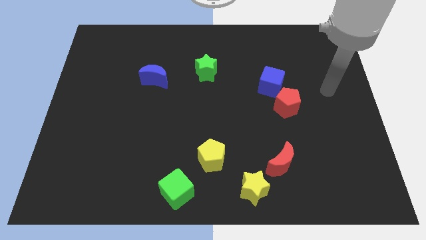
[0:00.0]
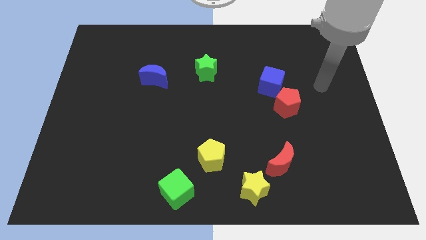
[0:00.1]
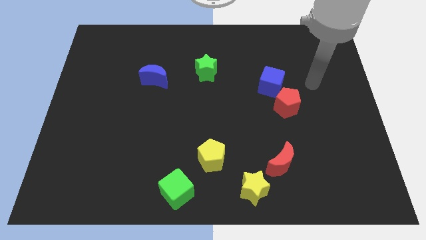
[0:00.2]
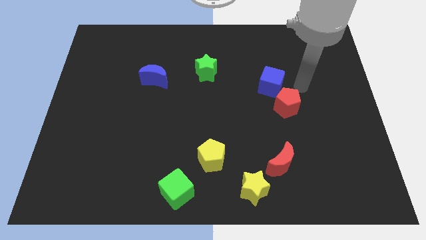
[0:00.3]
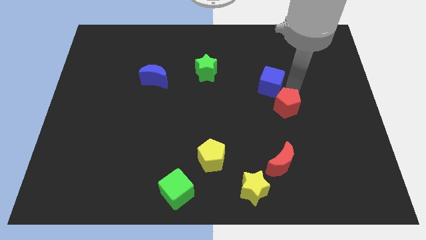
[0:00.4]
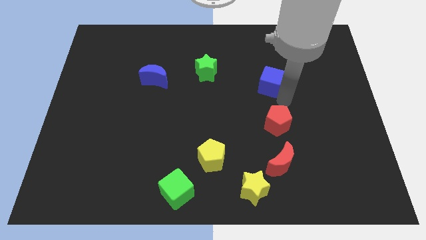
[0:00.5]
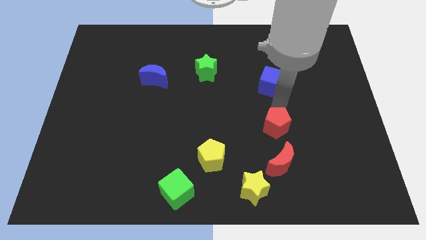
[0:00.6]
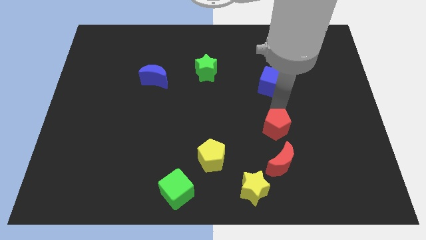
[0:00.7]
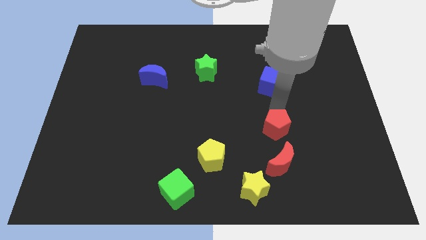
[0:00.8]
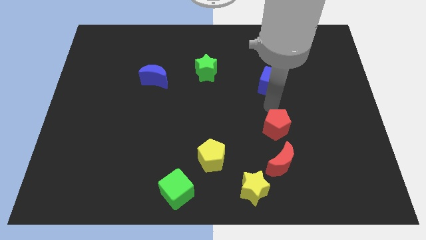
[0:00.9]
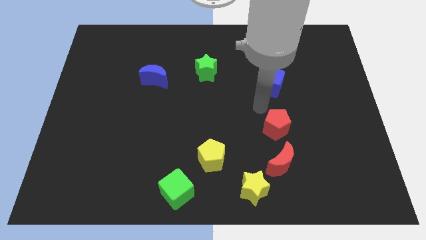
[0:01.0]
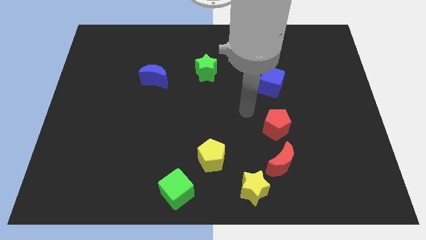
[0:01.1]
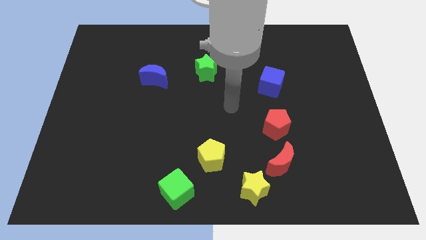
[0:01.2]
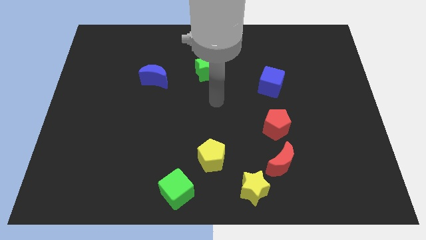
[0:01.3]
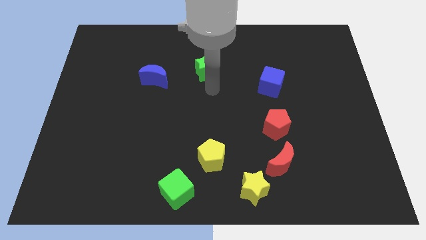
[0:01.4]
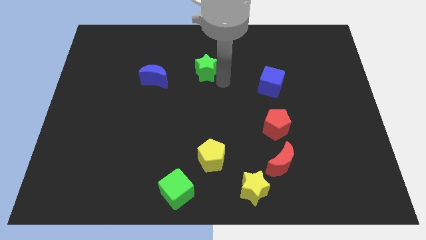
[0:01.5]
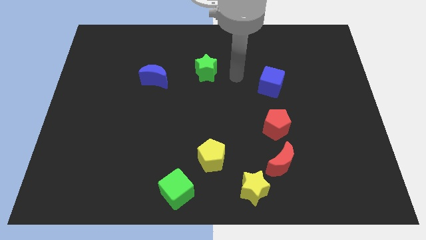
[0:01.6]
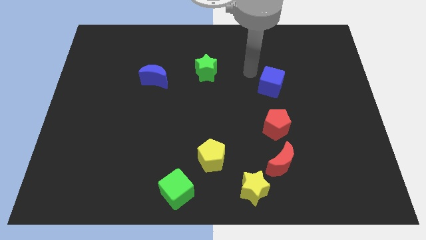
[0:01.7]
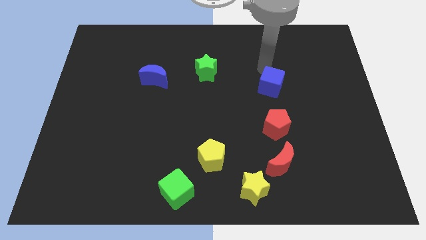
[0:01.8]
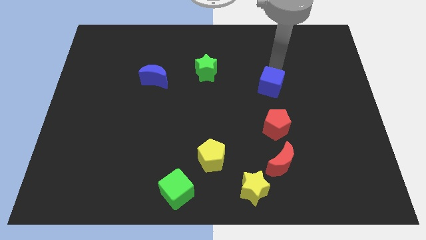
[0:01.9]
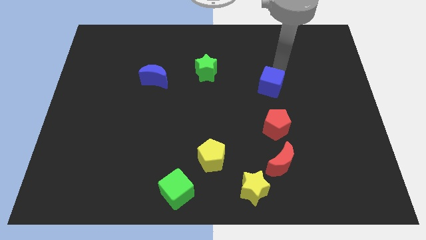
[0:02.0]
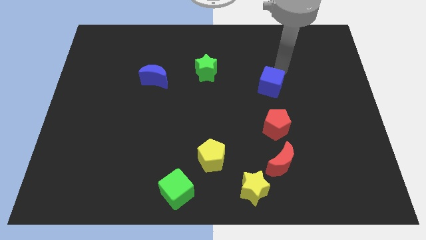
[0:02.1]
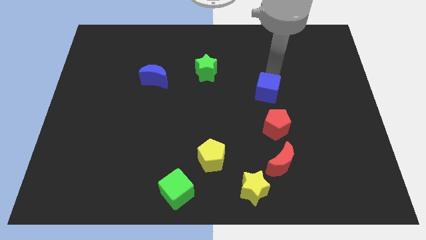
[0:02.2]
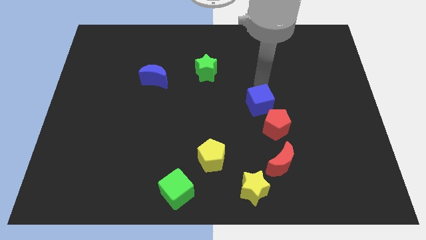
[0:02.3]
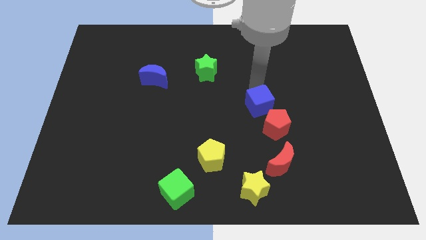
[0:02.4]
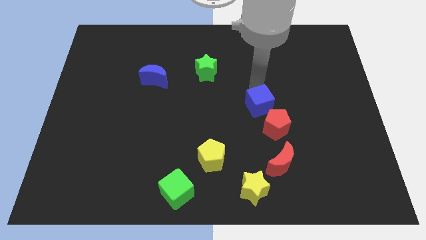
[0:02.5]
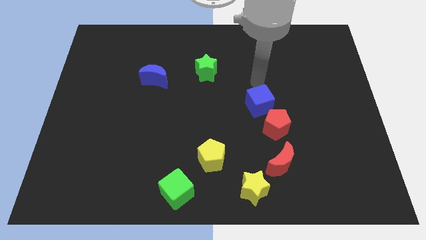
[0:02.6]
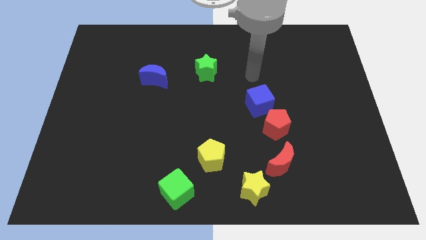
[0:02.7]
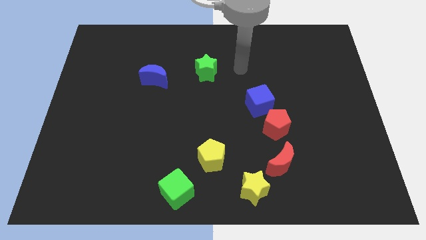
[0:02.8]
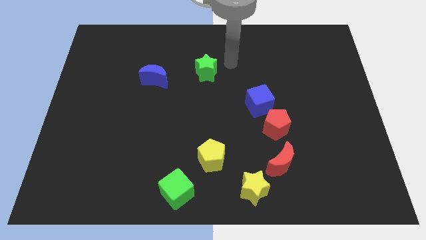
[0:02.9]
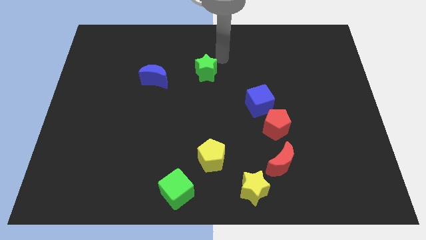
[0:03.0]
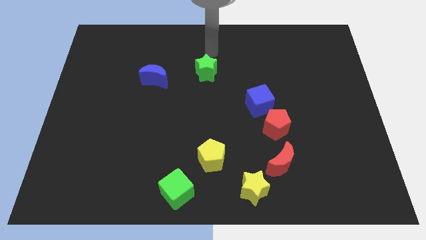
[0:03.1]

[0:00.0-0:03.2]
move red pentagon blue cube to the center

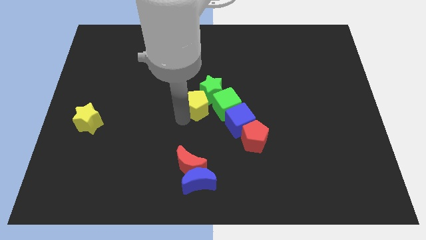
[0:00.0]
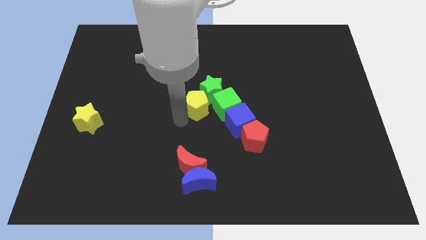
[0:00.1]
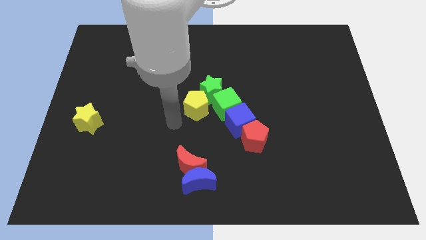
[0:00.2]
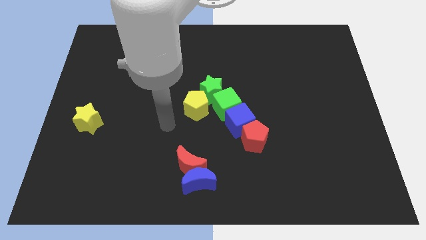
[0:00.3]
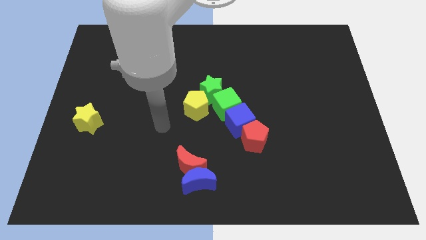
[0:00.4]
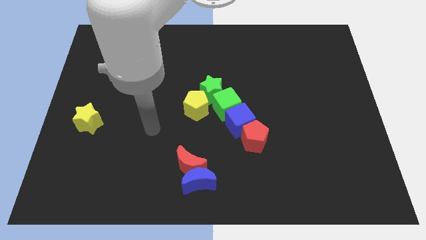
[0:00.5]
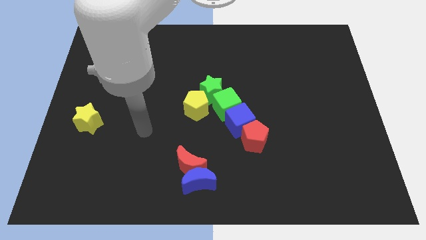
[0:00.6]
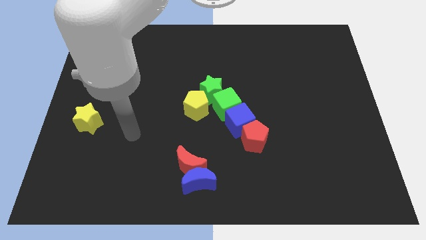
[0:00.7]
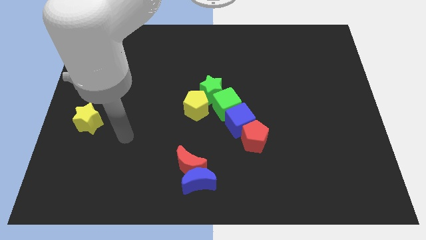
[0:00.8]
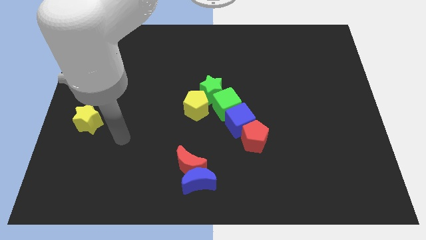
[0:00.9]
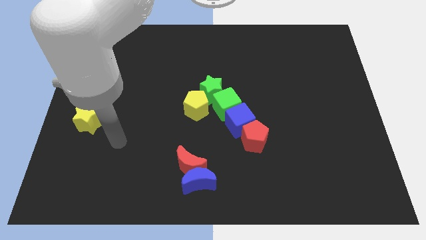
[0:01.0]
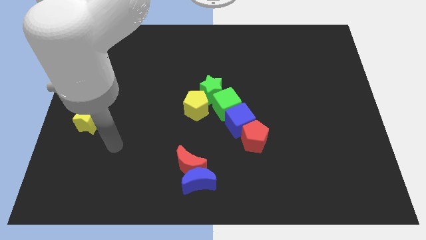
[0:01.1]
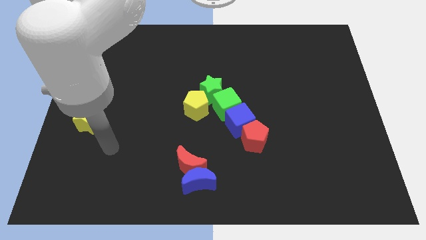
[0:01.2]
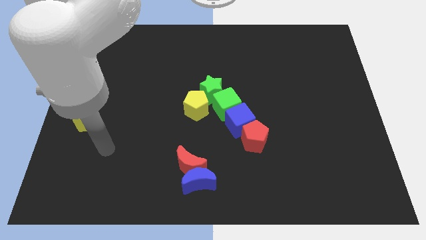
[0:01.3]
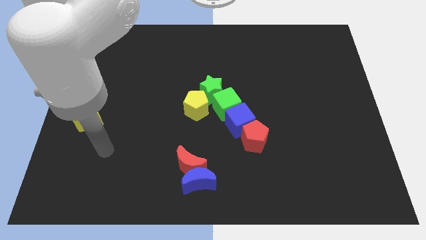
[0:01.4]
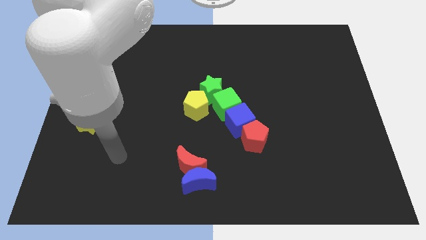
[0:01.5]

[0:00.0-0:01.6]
move the arm away from the yellow pentagon

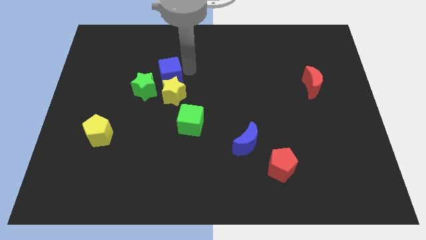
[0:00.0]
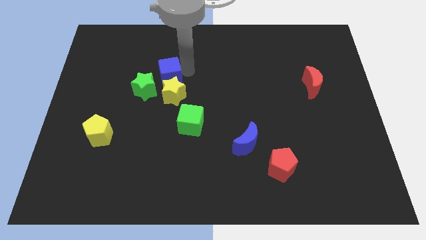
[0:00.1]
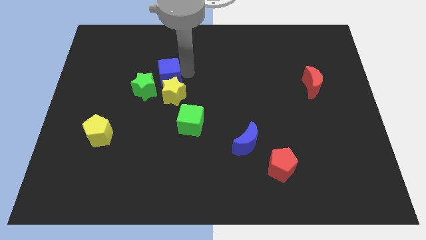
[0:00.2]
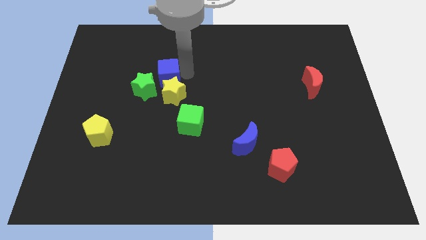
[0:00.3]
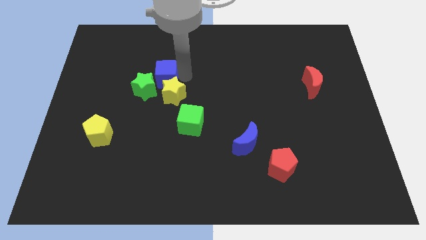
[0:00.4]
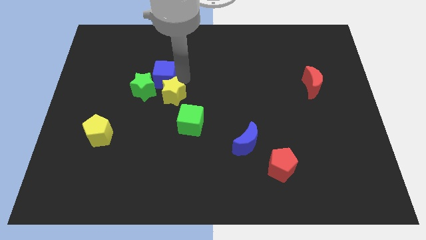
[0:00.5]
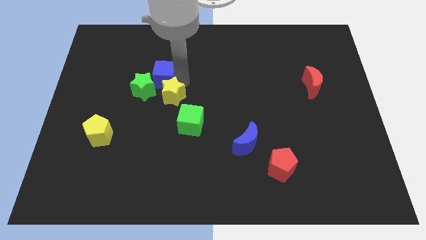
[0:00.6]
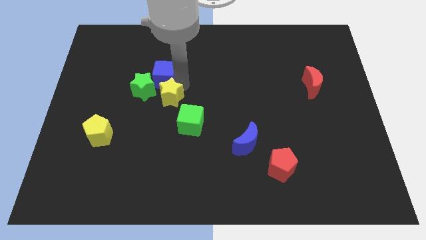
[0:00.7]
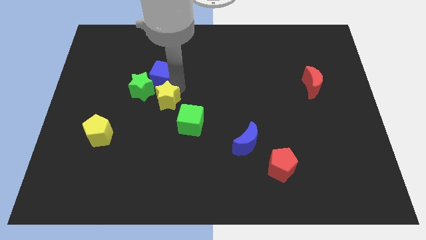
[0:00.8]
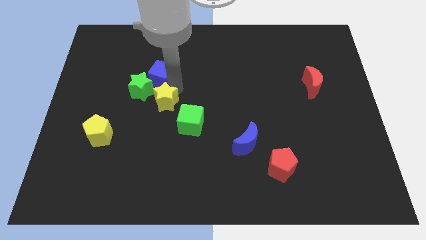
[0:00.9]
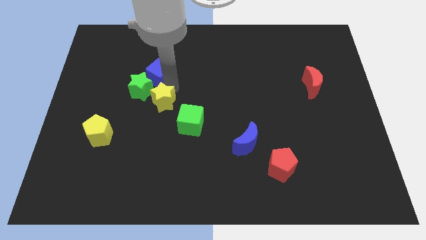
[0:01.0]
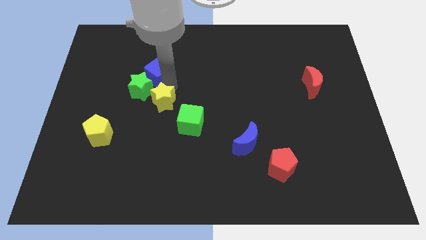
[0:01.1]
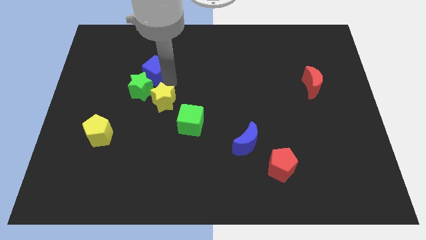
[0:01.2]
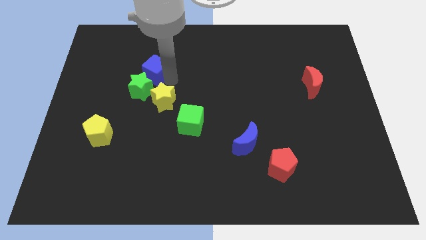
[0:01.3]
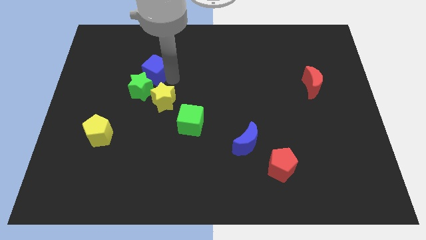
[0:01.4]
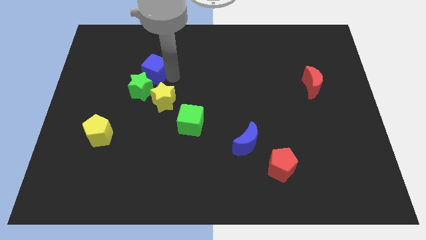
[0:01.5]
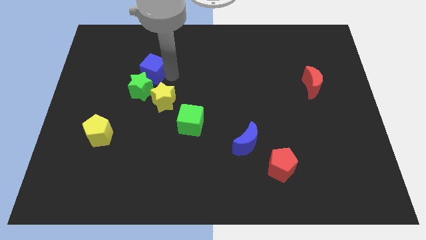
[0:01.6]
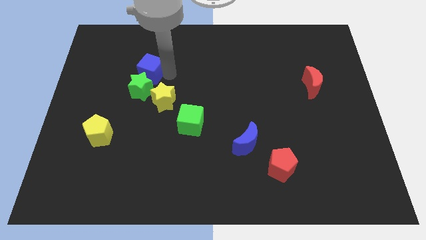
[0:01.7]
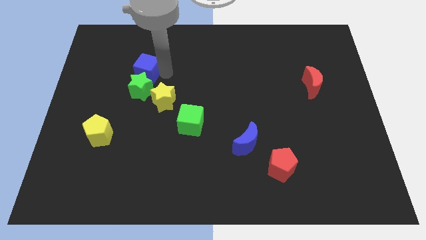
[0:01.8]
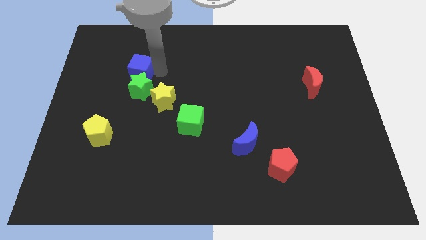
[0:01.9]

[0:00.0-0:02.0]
push the blue cube on top of the green star

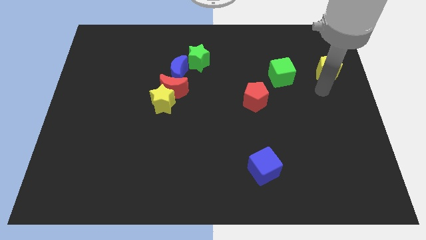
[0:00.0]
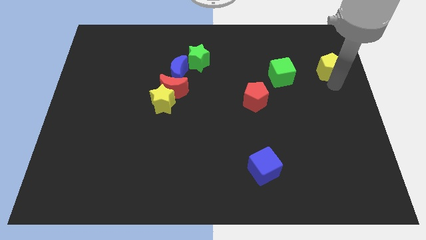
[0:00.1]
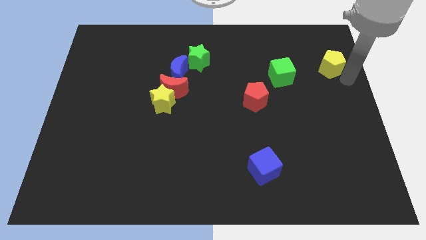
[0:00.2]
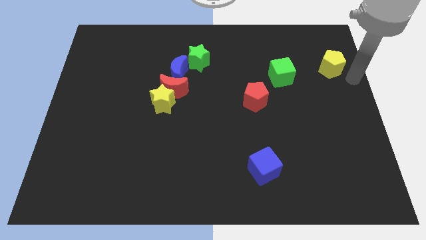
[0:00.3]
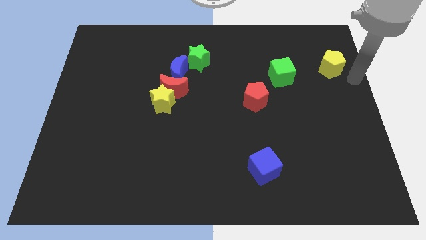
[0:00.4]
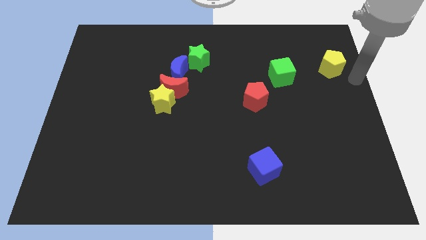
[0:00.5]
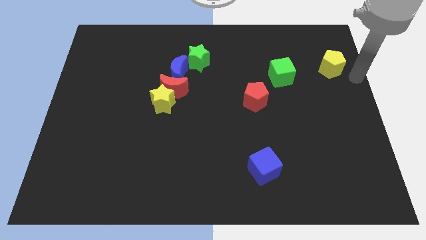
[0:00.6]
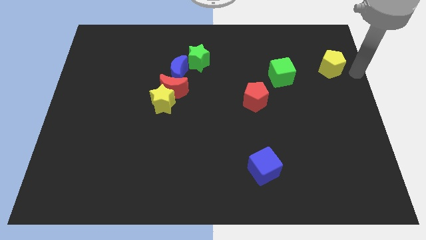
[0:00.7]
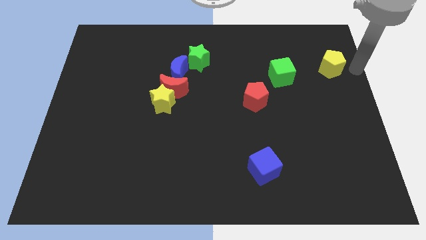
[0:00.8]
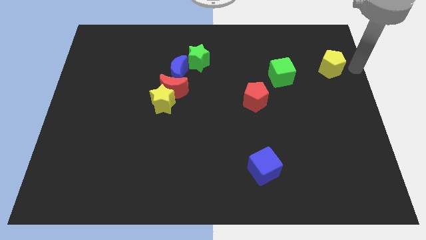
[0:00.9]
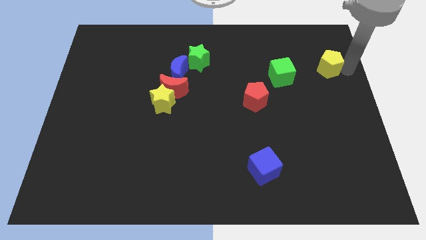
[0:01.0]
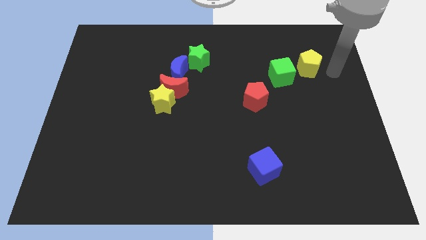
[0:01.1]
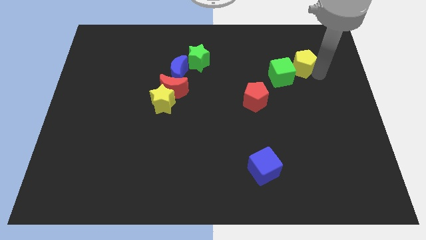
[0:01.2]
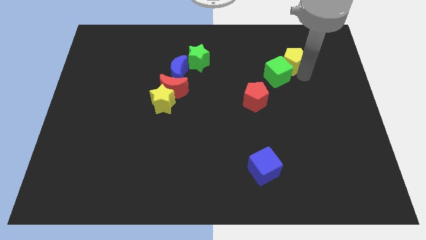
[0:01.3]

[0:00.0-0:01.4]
adjust the yellow pentagon on the top right of the green cube

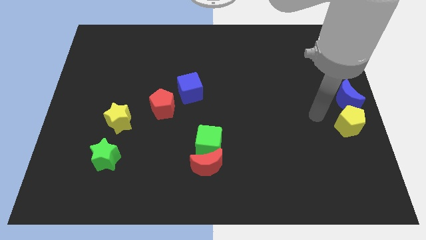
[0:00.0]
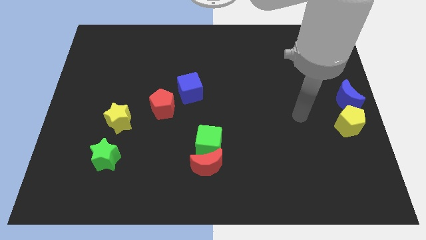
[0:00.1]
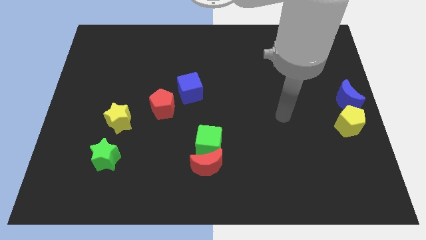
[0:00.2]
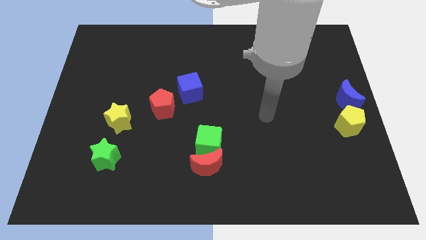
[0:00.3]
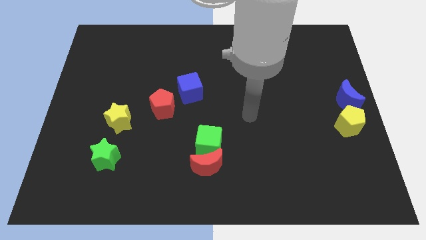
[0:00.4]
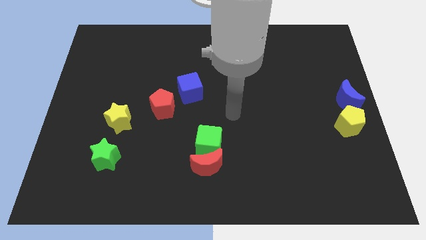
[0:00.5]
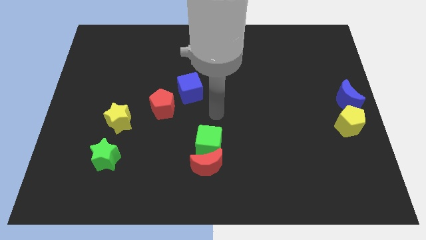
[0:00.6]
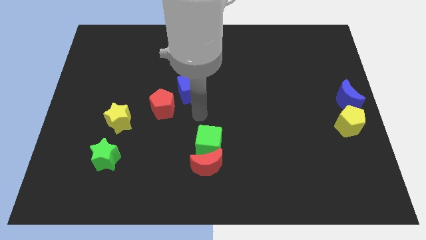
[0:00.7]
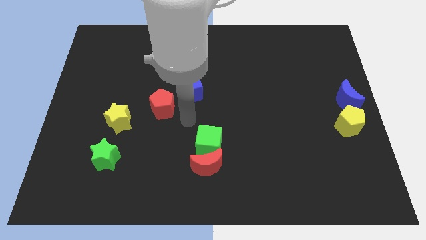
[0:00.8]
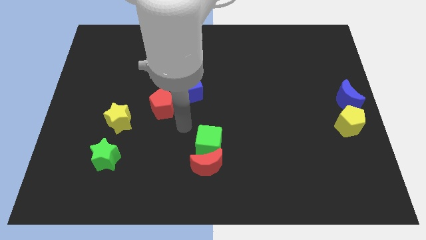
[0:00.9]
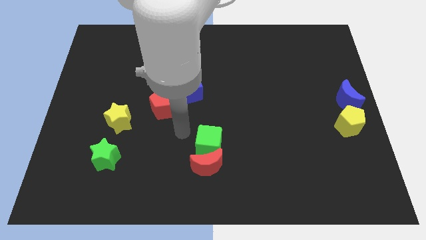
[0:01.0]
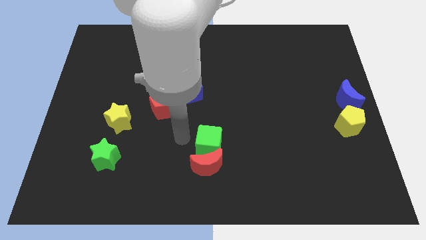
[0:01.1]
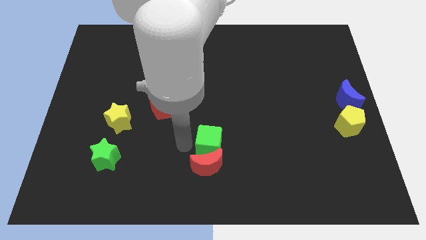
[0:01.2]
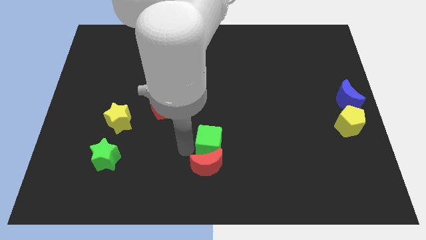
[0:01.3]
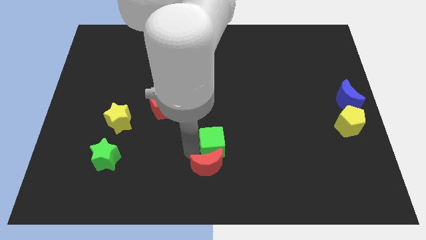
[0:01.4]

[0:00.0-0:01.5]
move your arm to the left side of the green cube
